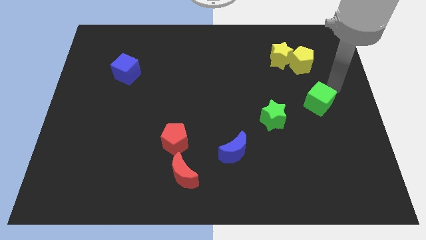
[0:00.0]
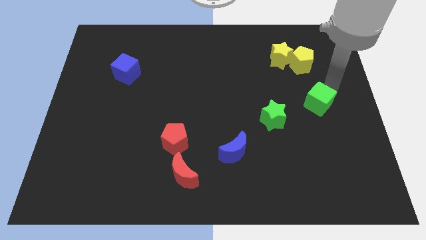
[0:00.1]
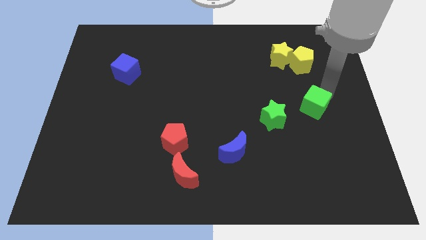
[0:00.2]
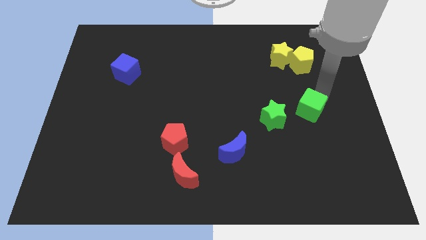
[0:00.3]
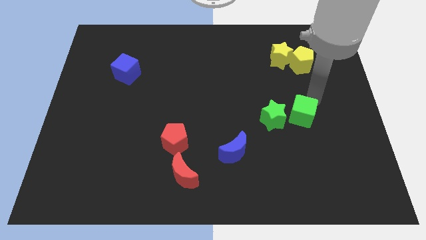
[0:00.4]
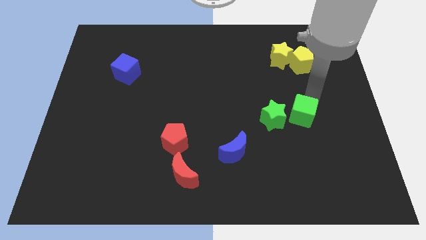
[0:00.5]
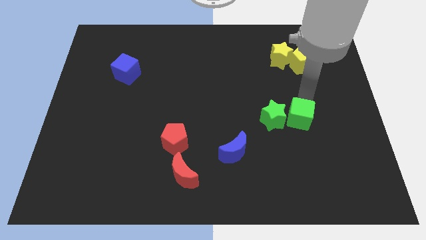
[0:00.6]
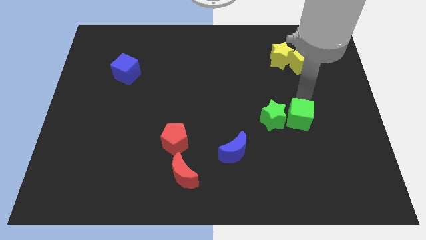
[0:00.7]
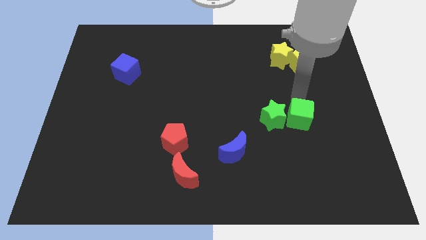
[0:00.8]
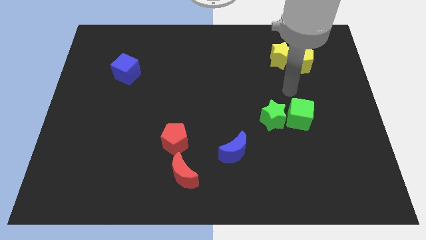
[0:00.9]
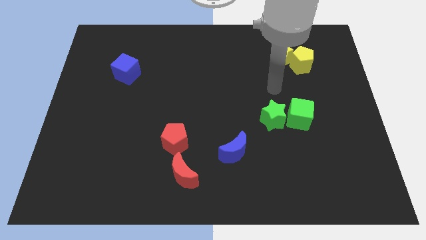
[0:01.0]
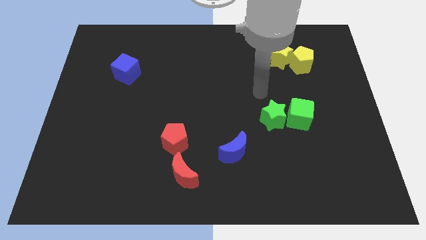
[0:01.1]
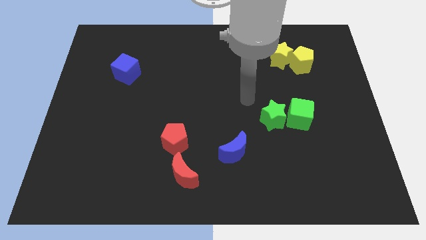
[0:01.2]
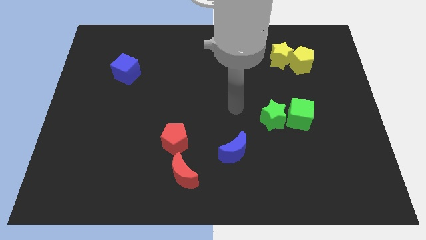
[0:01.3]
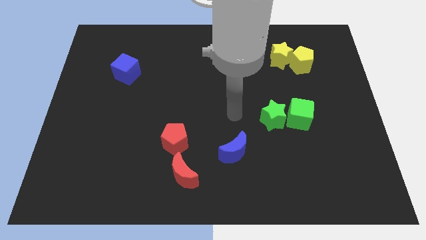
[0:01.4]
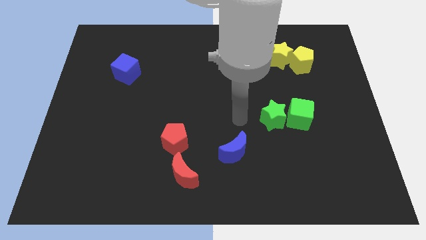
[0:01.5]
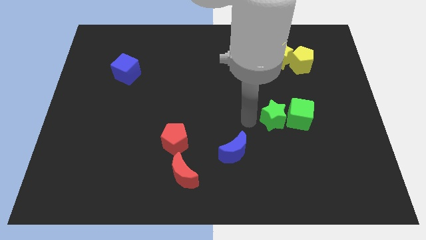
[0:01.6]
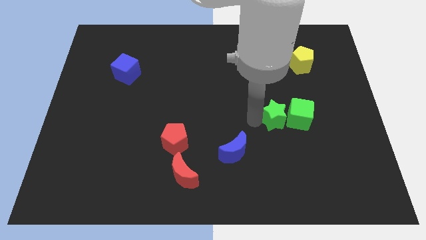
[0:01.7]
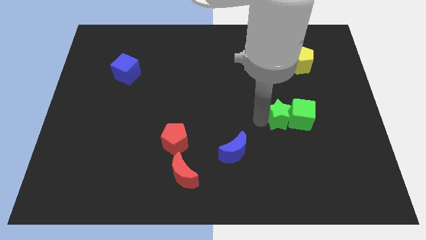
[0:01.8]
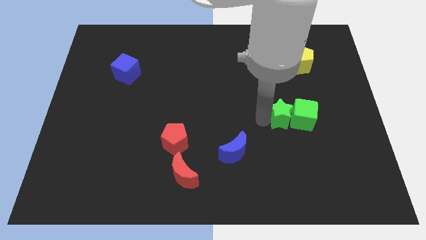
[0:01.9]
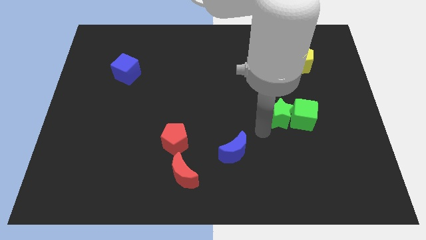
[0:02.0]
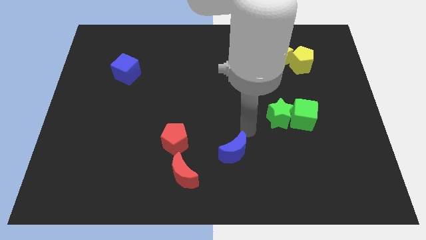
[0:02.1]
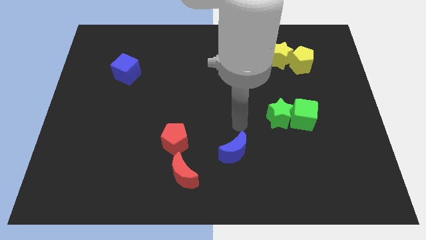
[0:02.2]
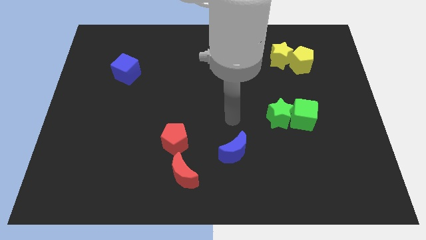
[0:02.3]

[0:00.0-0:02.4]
move the green star slightly with green cube

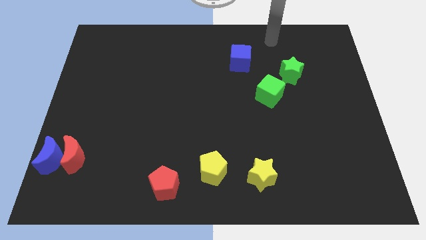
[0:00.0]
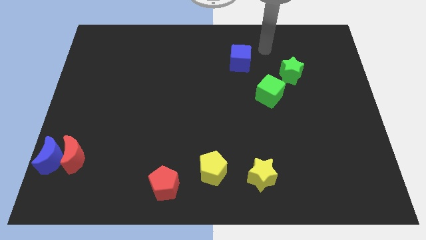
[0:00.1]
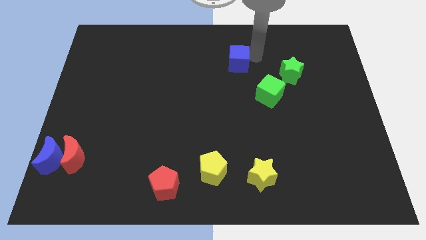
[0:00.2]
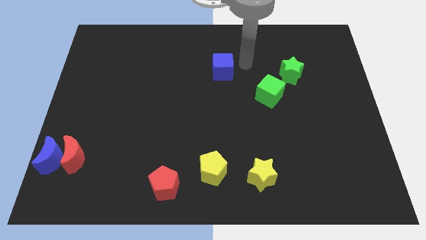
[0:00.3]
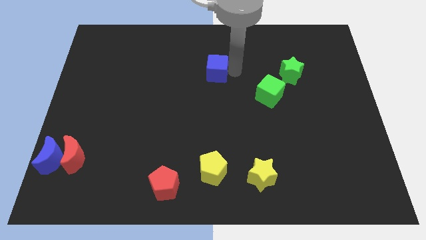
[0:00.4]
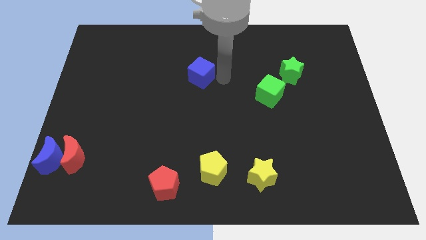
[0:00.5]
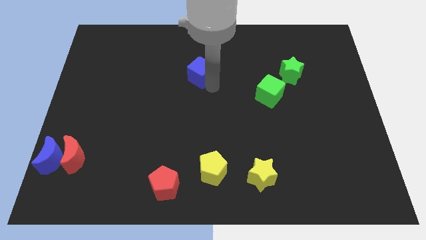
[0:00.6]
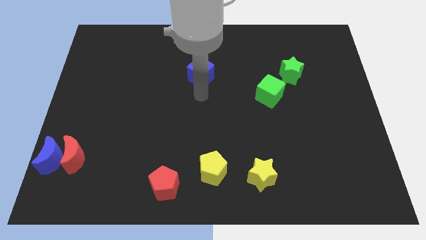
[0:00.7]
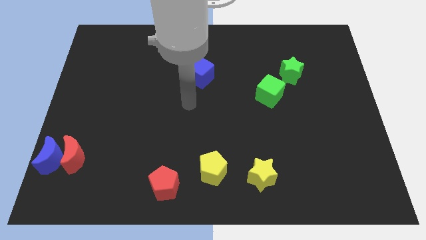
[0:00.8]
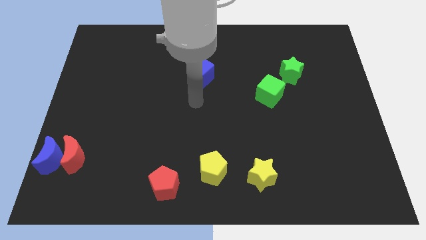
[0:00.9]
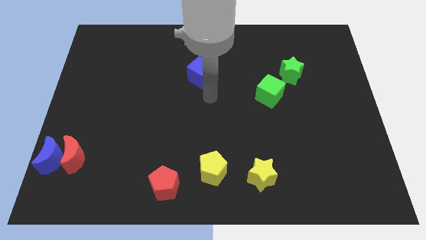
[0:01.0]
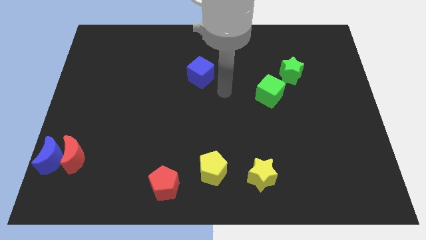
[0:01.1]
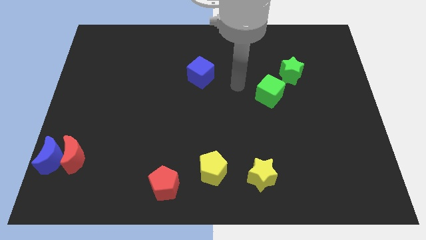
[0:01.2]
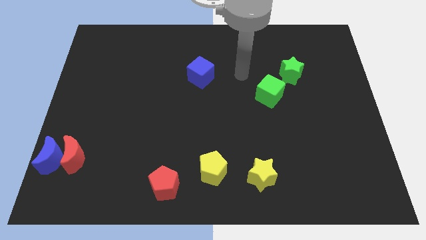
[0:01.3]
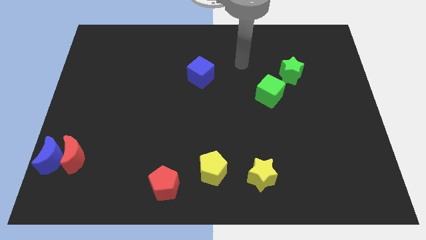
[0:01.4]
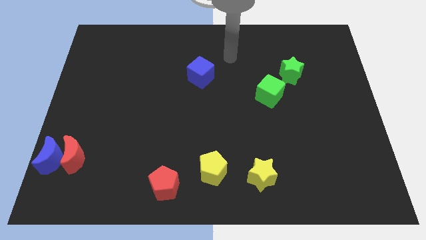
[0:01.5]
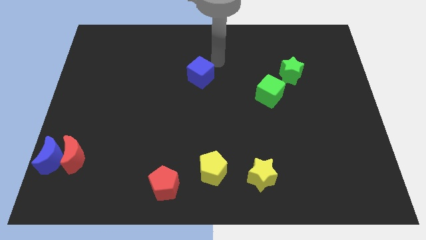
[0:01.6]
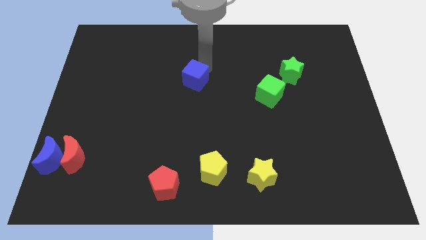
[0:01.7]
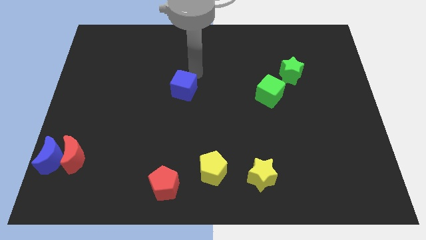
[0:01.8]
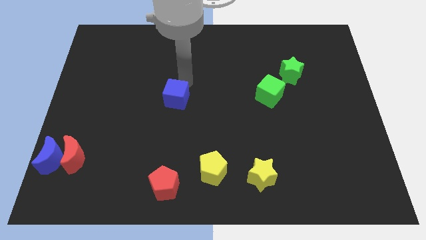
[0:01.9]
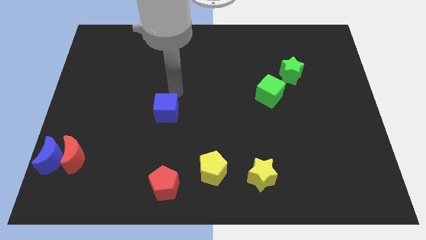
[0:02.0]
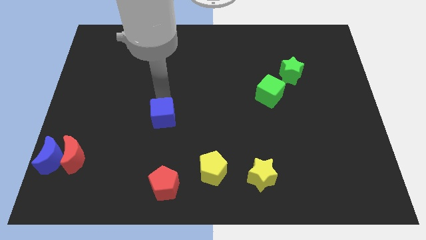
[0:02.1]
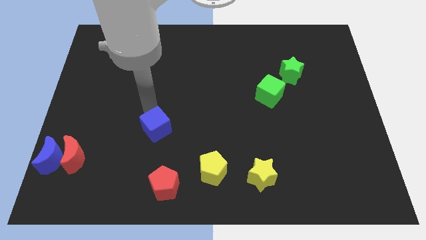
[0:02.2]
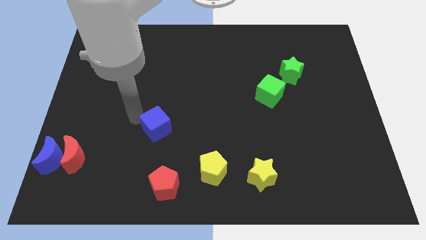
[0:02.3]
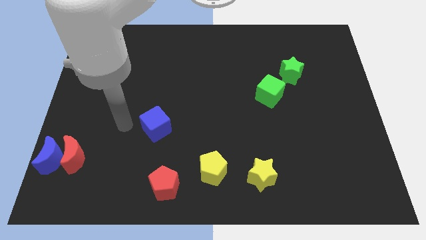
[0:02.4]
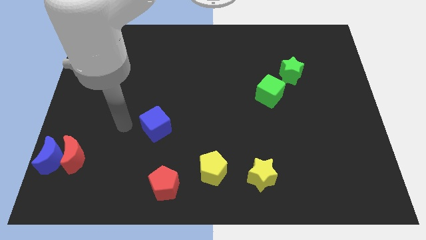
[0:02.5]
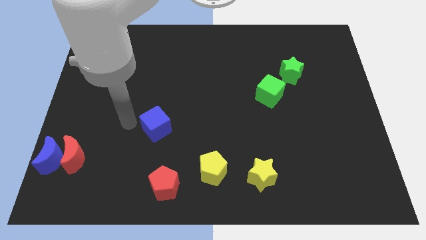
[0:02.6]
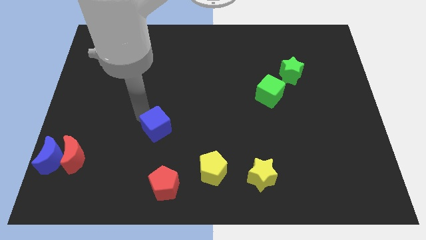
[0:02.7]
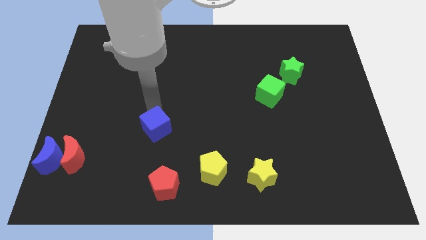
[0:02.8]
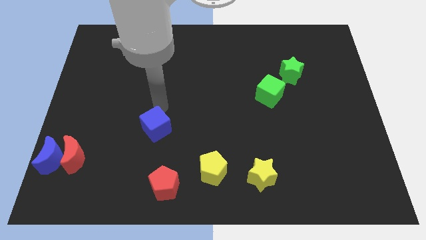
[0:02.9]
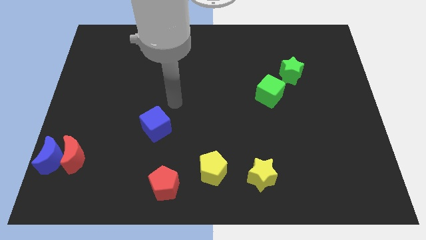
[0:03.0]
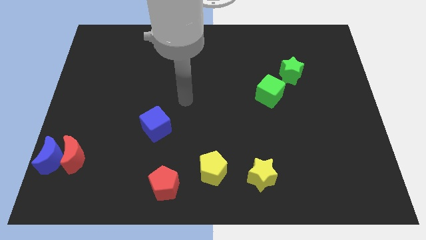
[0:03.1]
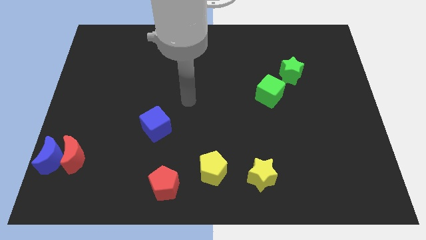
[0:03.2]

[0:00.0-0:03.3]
put the blue cube vertically above the red pentagon

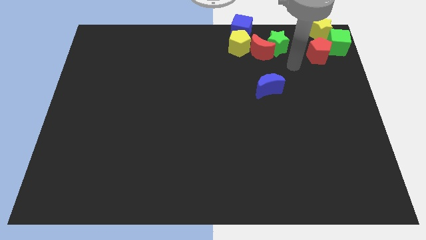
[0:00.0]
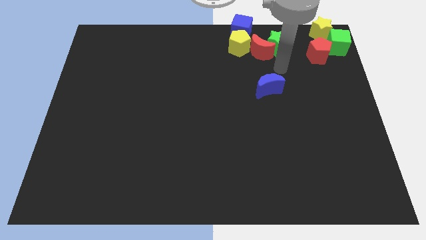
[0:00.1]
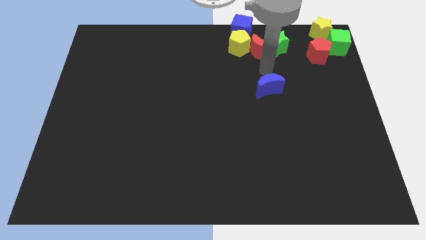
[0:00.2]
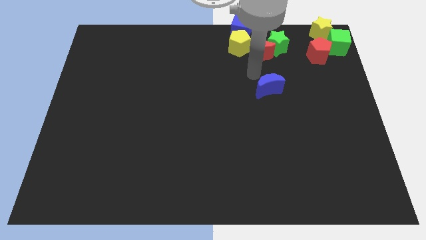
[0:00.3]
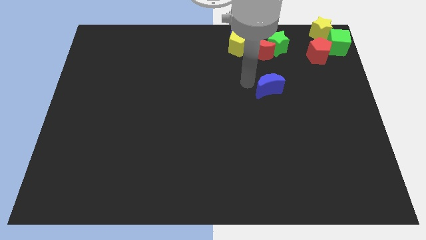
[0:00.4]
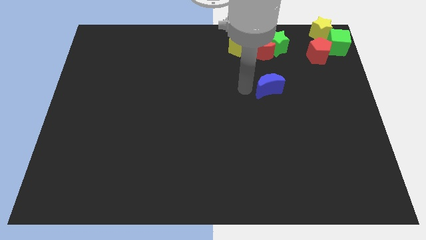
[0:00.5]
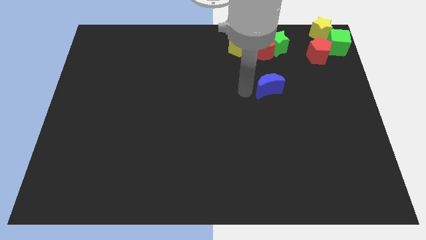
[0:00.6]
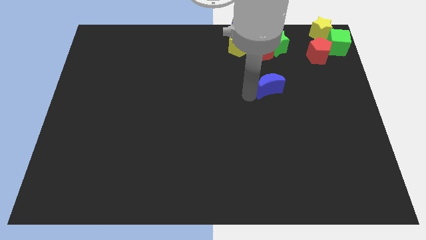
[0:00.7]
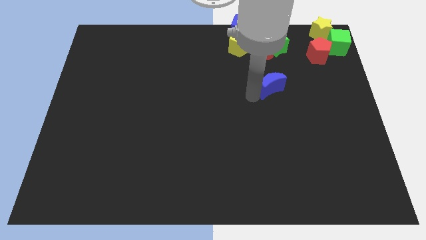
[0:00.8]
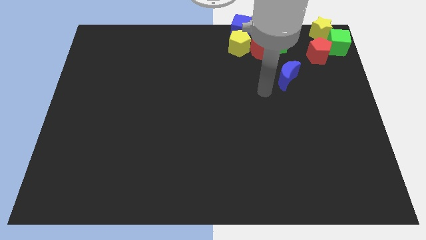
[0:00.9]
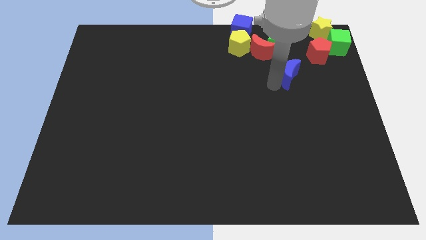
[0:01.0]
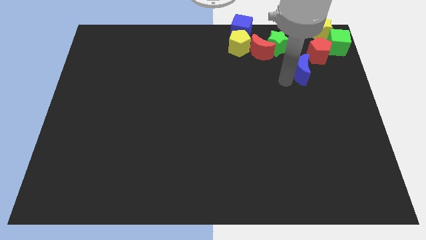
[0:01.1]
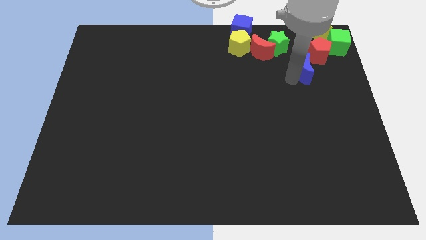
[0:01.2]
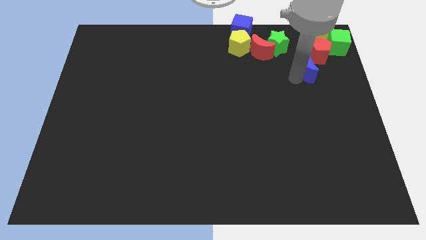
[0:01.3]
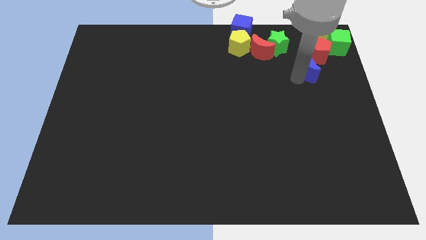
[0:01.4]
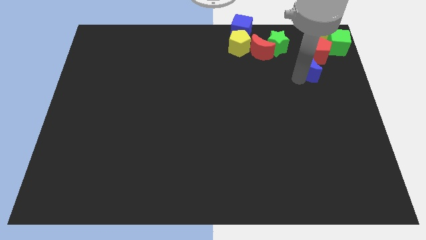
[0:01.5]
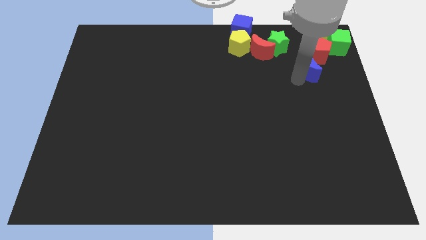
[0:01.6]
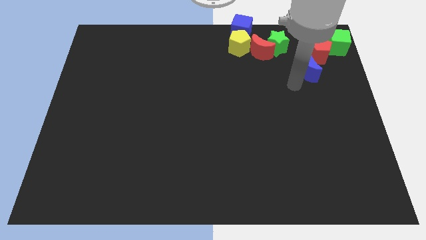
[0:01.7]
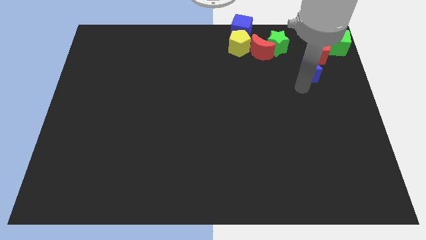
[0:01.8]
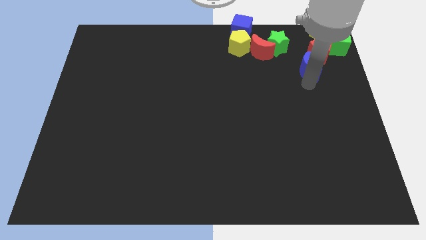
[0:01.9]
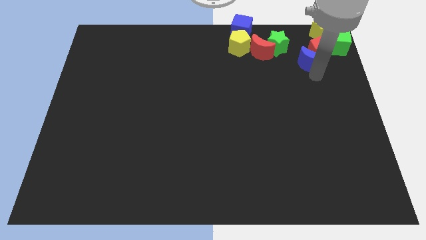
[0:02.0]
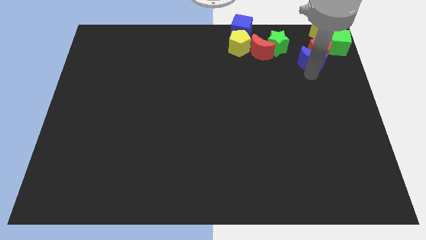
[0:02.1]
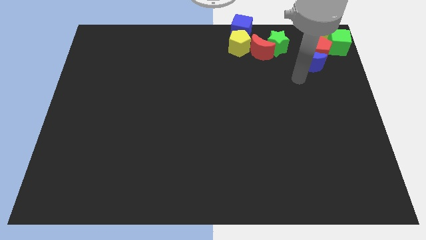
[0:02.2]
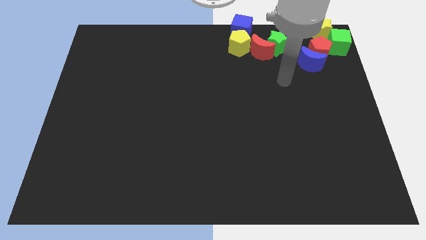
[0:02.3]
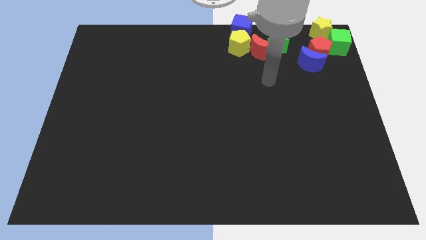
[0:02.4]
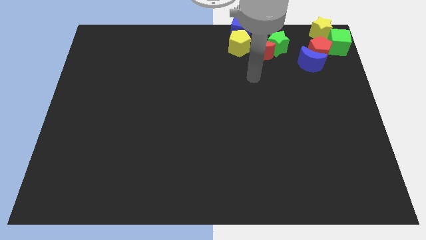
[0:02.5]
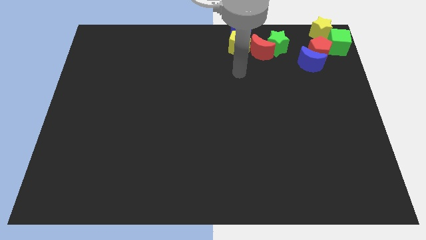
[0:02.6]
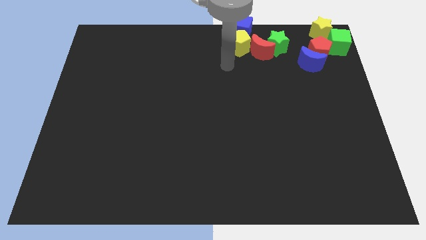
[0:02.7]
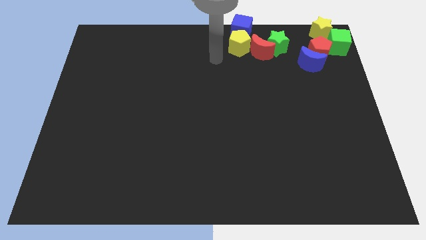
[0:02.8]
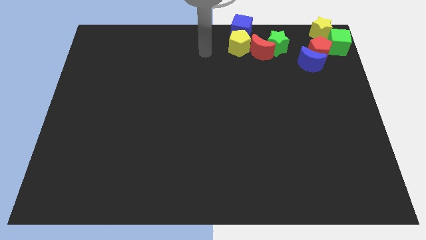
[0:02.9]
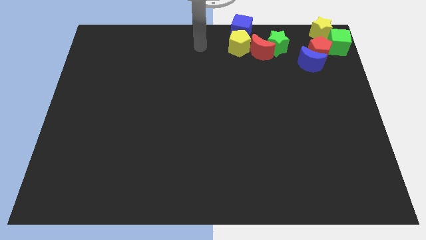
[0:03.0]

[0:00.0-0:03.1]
push the blue moon into red pentagon
